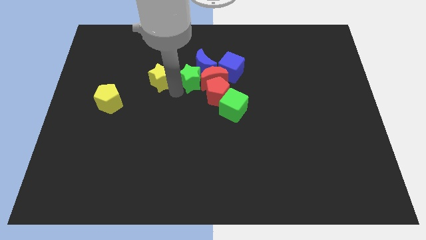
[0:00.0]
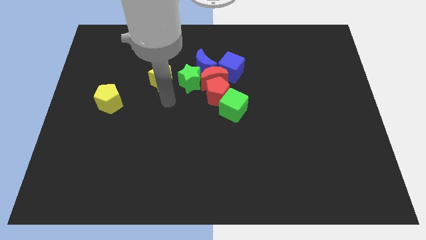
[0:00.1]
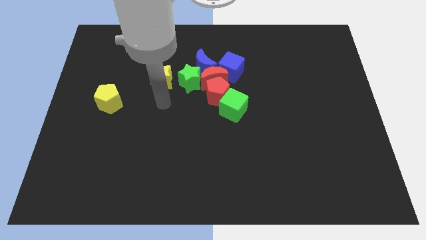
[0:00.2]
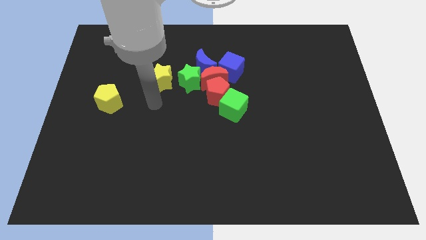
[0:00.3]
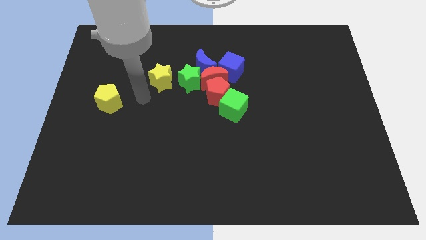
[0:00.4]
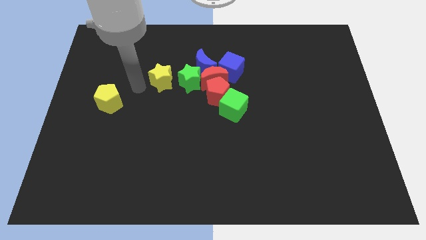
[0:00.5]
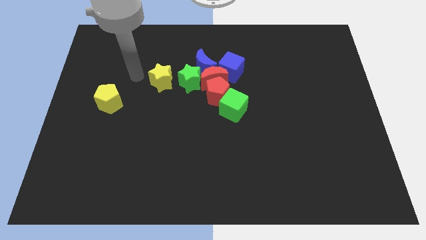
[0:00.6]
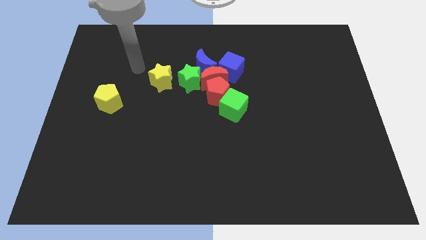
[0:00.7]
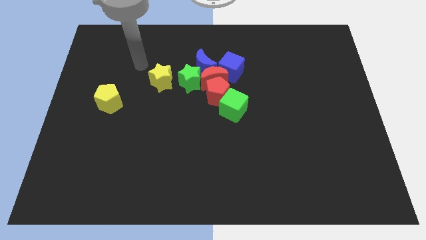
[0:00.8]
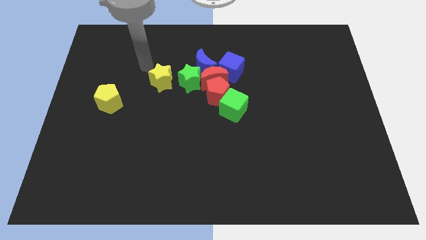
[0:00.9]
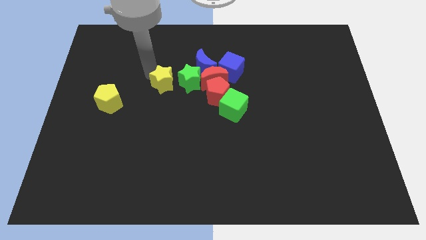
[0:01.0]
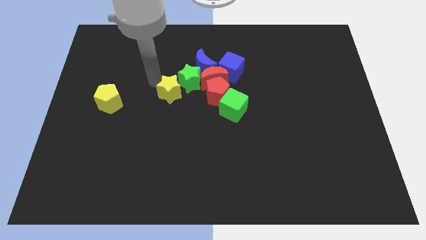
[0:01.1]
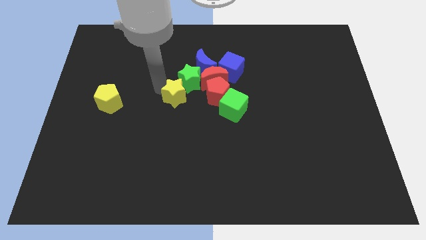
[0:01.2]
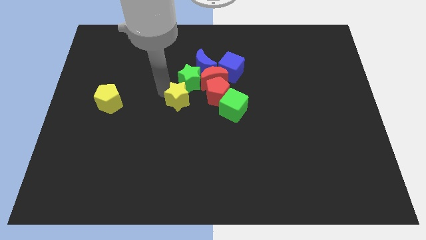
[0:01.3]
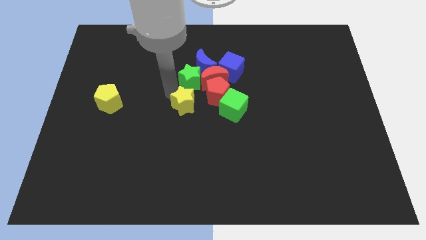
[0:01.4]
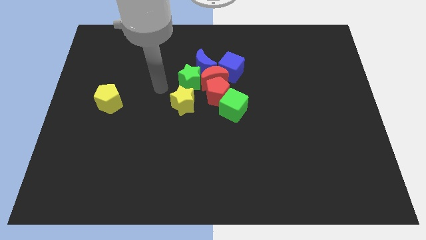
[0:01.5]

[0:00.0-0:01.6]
push the yellow star to the bottom of the green star

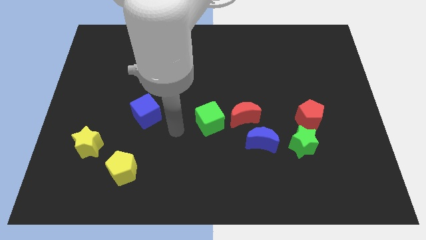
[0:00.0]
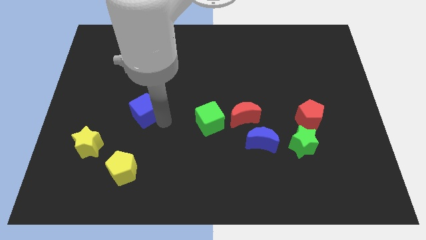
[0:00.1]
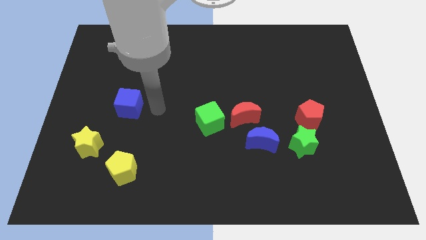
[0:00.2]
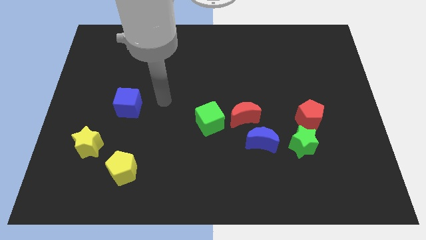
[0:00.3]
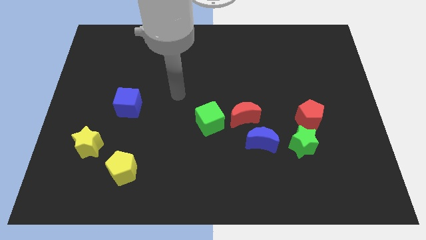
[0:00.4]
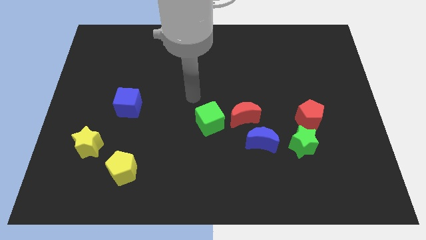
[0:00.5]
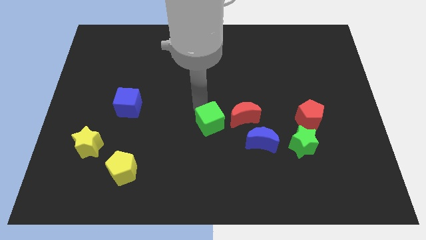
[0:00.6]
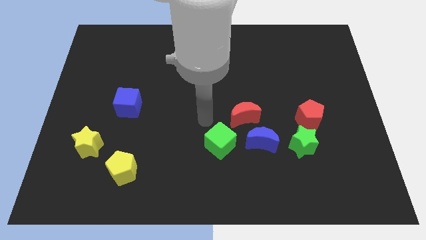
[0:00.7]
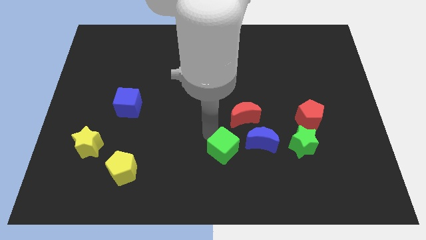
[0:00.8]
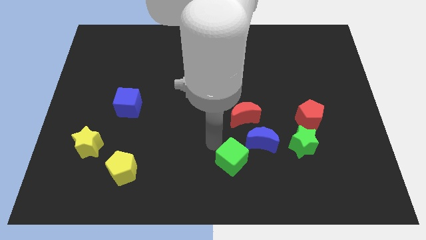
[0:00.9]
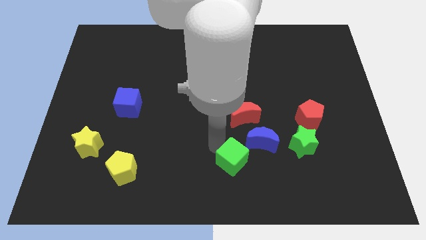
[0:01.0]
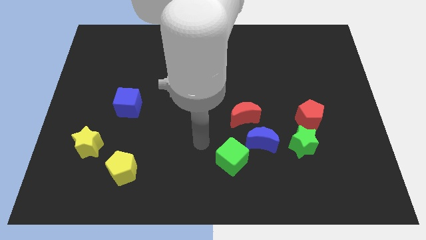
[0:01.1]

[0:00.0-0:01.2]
move the green cube away from the red moon

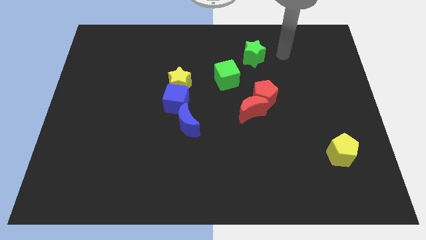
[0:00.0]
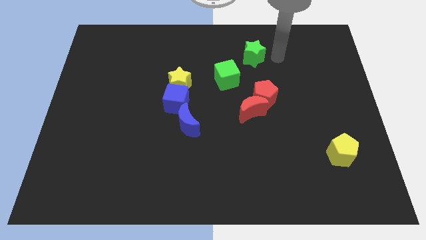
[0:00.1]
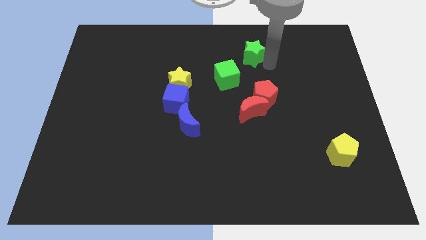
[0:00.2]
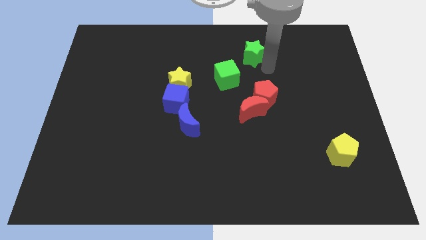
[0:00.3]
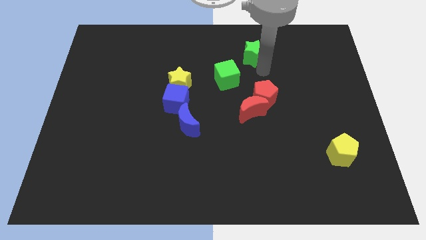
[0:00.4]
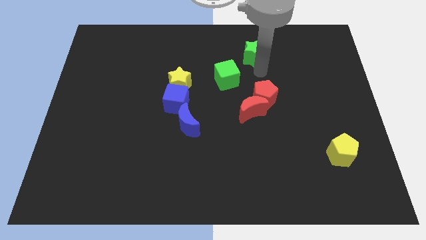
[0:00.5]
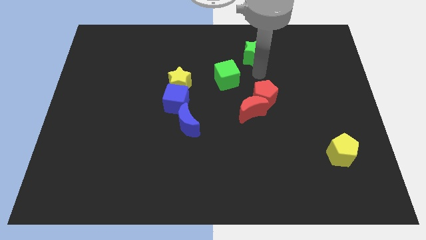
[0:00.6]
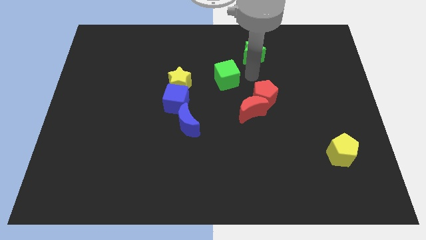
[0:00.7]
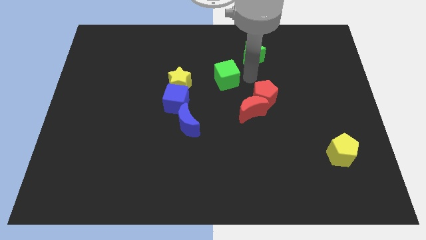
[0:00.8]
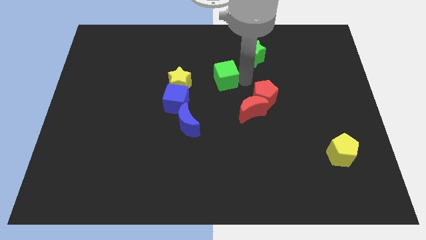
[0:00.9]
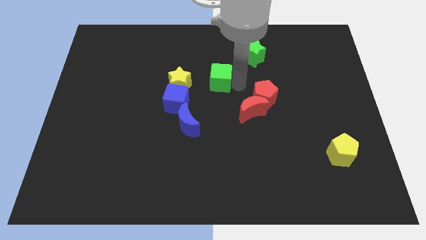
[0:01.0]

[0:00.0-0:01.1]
slightly move the green cube

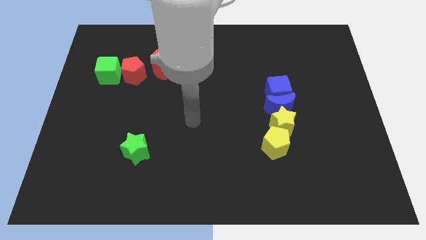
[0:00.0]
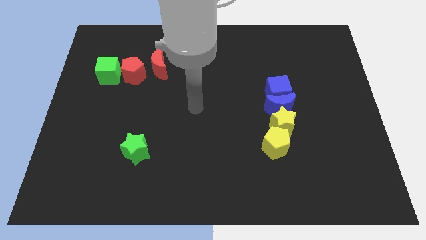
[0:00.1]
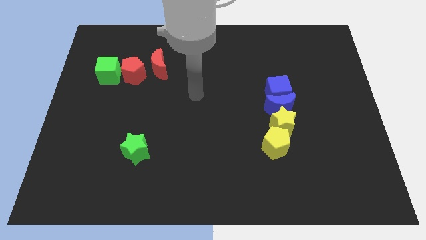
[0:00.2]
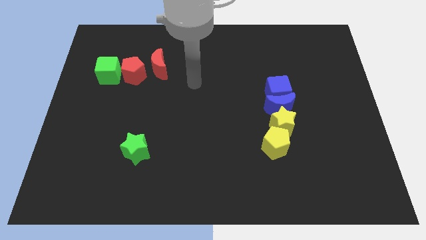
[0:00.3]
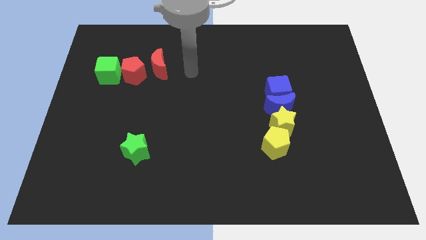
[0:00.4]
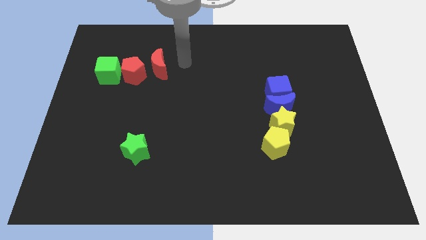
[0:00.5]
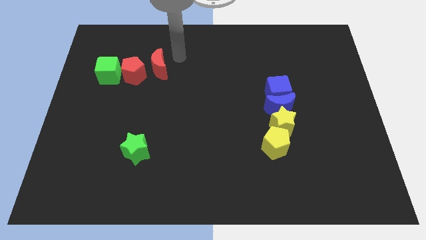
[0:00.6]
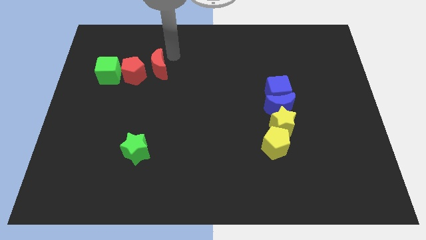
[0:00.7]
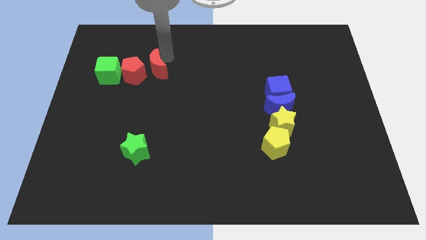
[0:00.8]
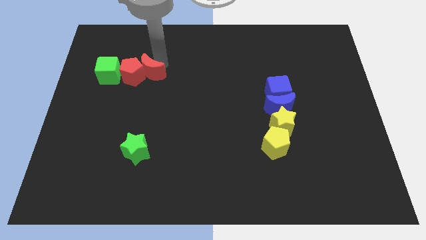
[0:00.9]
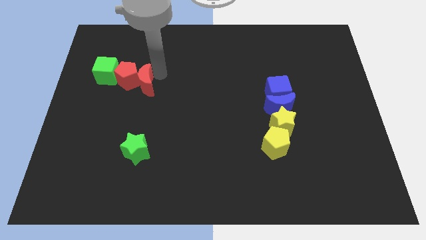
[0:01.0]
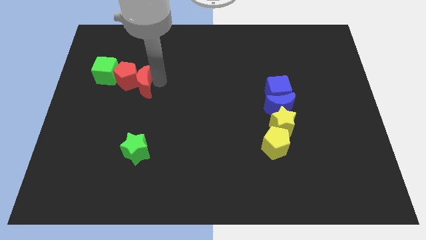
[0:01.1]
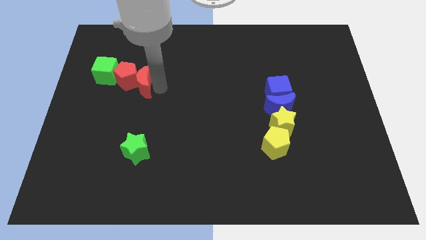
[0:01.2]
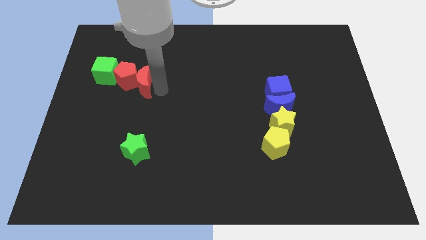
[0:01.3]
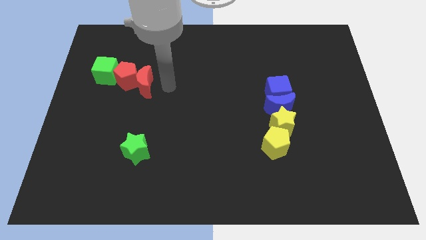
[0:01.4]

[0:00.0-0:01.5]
slide the red moon into the red pentagon

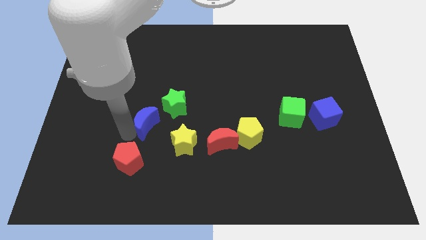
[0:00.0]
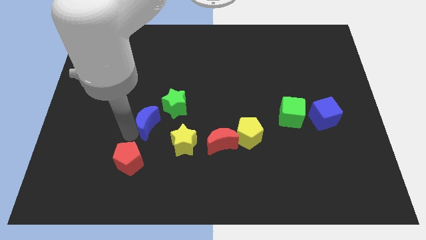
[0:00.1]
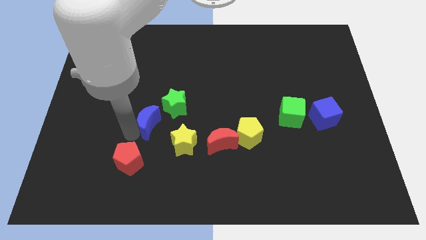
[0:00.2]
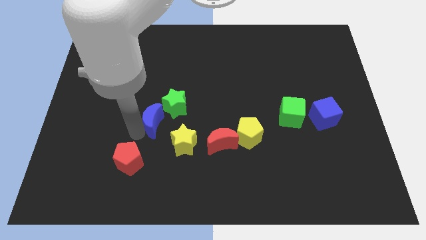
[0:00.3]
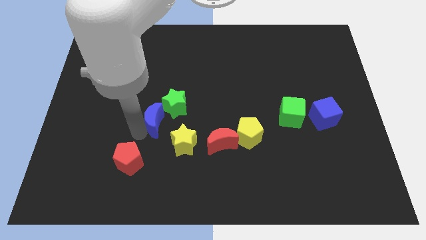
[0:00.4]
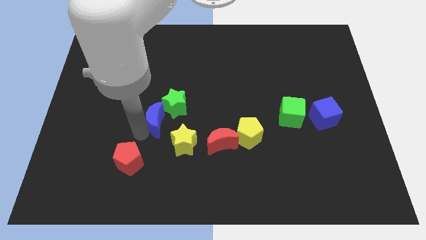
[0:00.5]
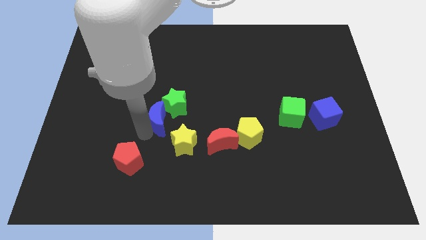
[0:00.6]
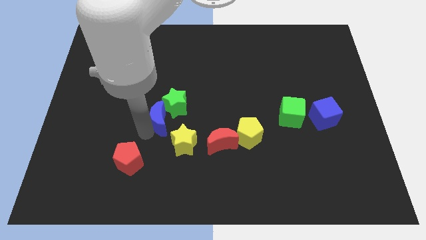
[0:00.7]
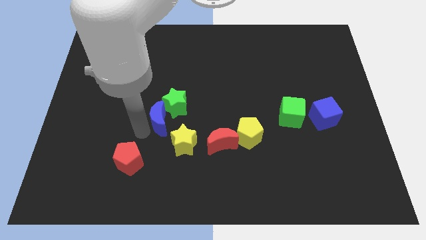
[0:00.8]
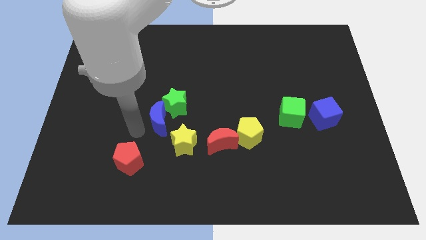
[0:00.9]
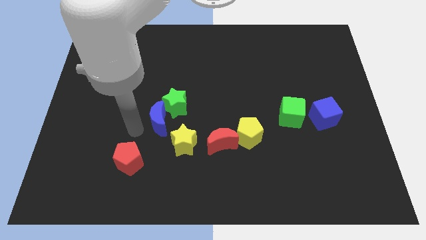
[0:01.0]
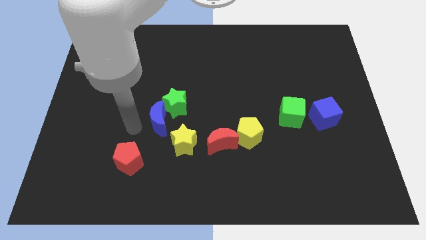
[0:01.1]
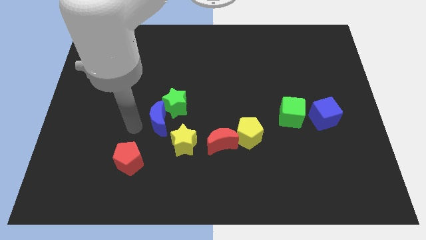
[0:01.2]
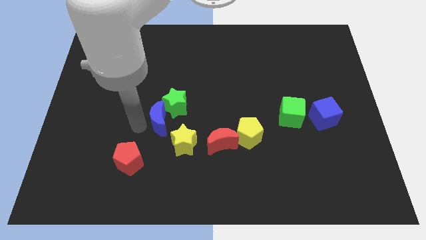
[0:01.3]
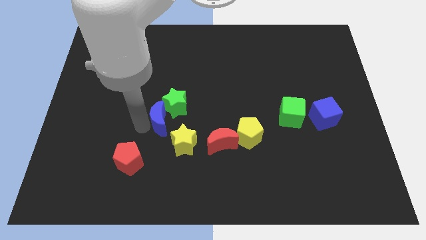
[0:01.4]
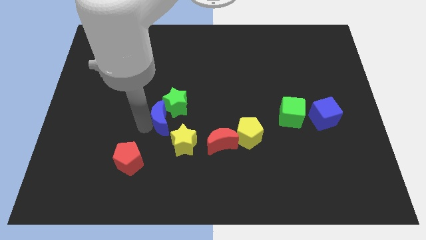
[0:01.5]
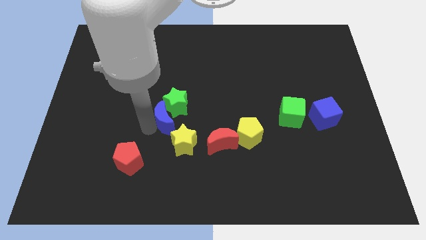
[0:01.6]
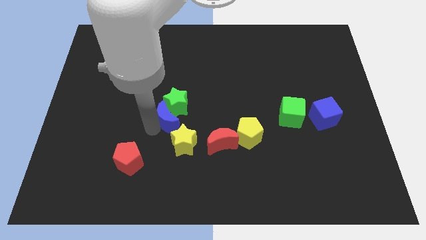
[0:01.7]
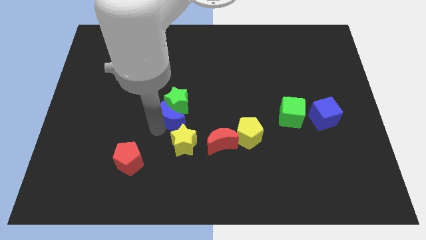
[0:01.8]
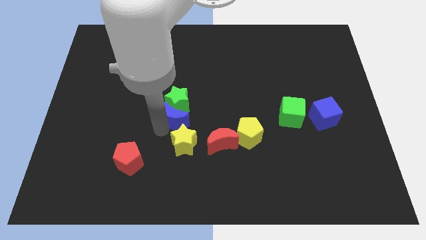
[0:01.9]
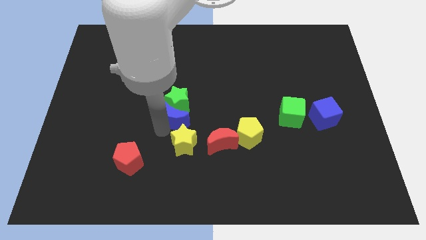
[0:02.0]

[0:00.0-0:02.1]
place blue moon in between green and yellow stars

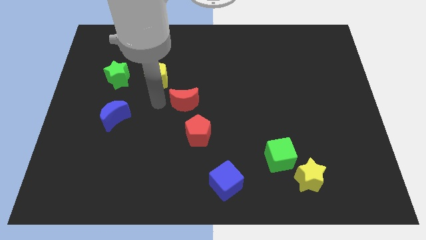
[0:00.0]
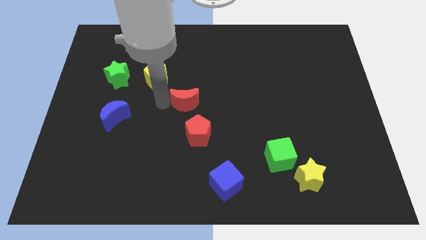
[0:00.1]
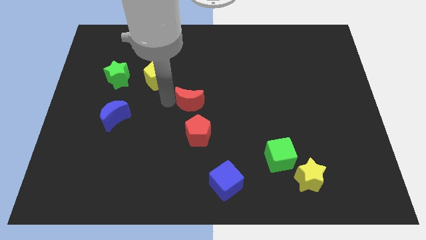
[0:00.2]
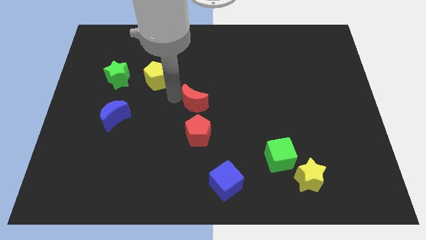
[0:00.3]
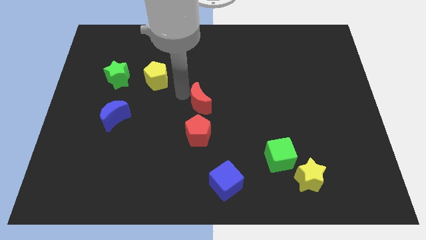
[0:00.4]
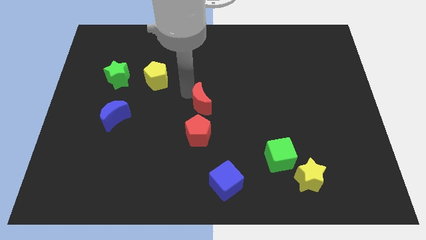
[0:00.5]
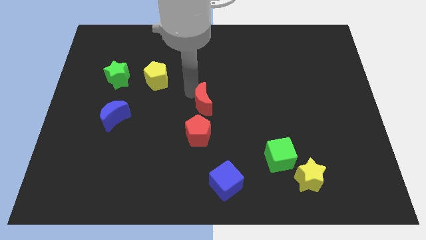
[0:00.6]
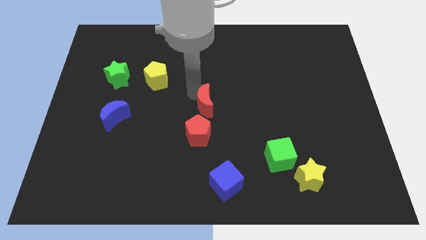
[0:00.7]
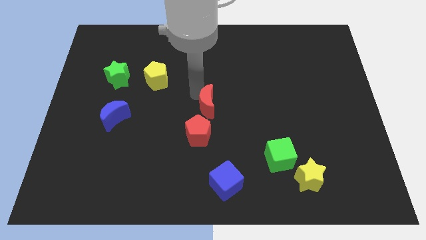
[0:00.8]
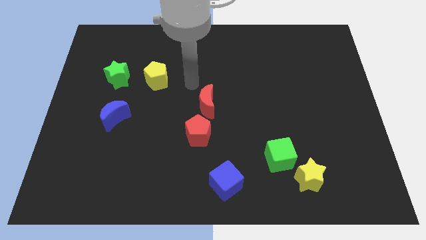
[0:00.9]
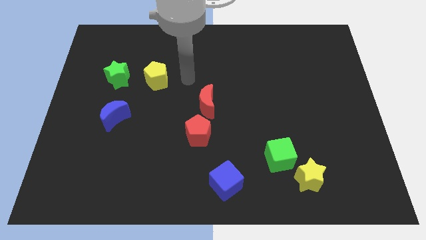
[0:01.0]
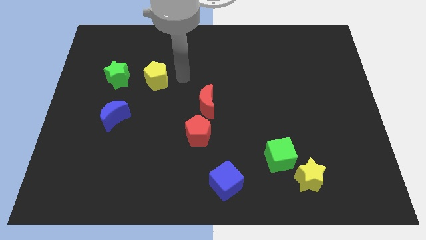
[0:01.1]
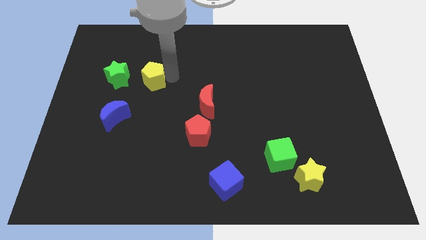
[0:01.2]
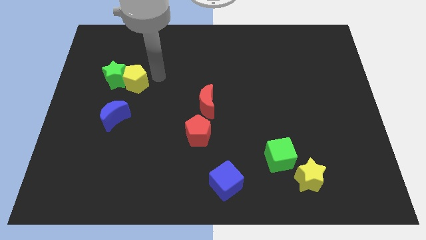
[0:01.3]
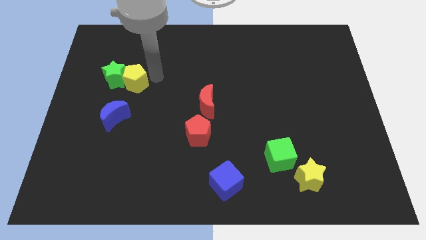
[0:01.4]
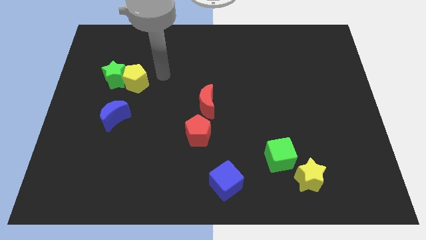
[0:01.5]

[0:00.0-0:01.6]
move the red crescent towards the top of the red pentagon at the center of the board
